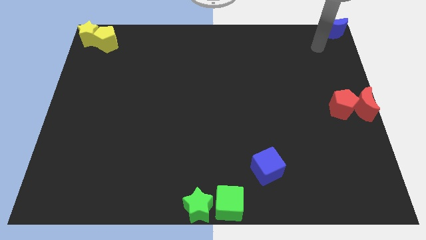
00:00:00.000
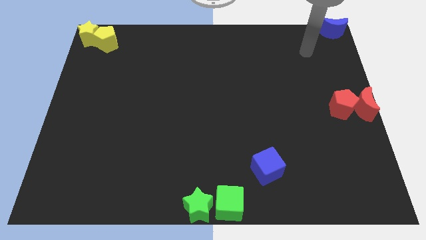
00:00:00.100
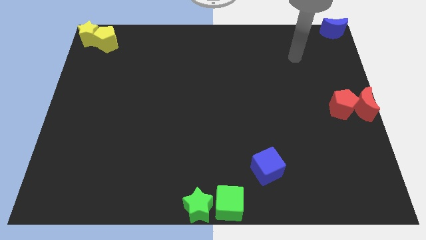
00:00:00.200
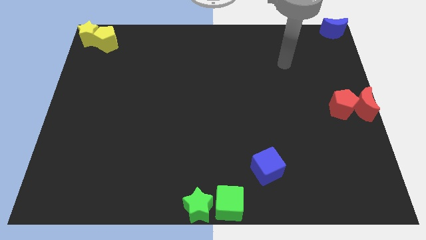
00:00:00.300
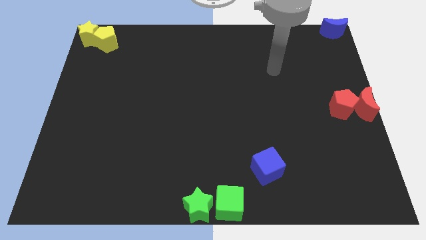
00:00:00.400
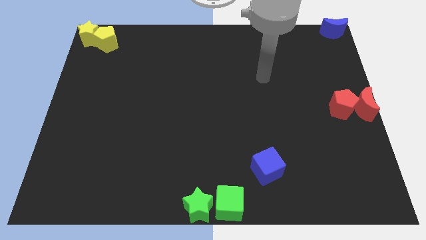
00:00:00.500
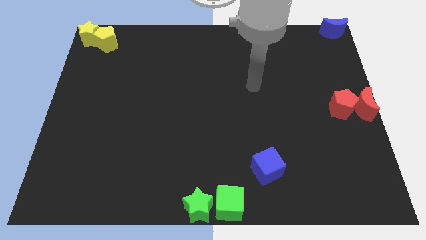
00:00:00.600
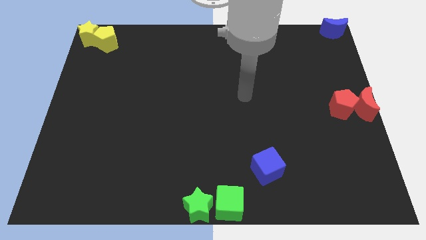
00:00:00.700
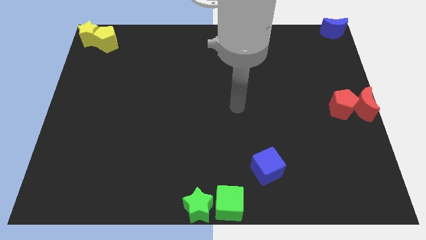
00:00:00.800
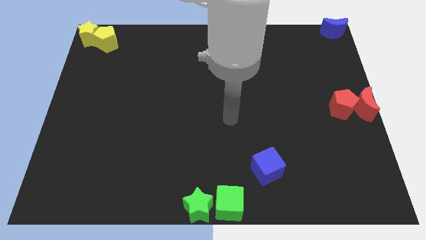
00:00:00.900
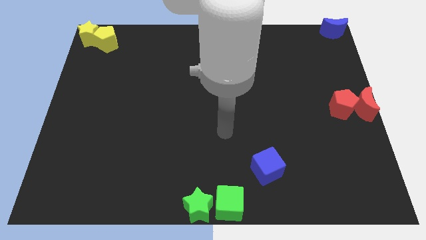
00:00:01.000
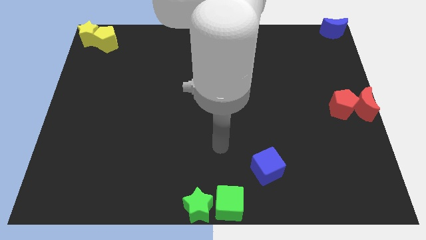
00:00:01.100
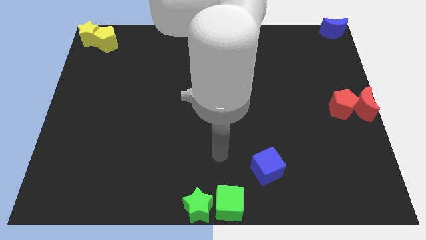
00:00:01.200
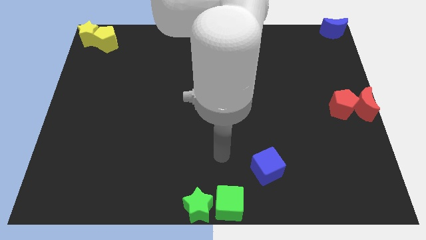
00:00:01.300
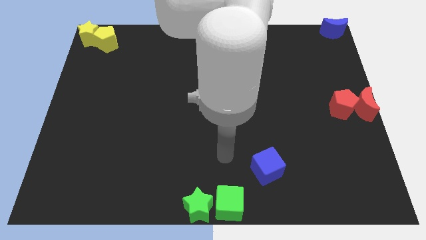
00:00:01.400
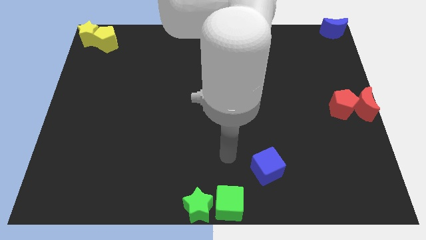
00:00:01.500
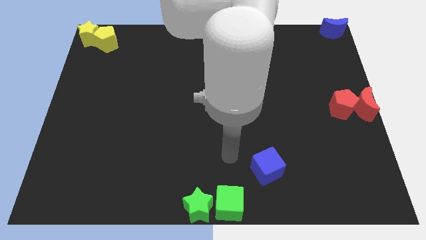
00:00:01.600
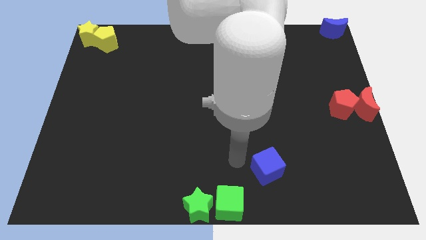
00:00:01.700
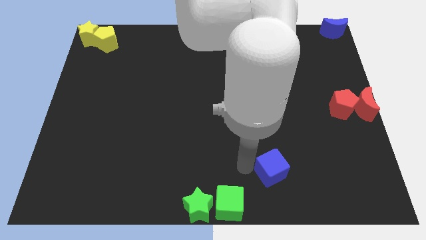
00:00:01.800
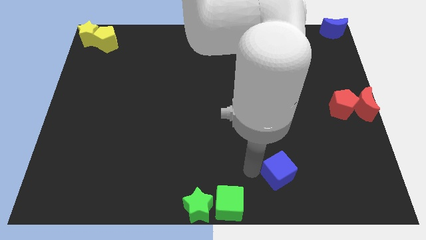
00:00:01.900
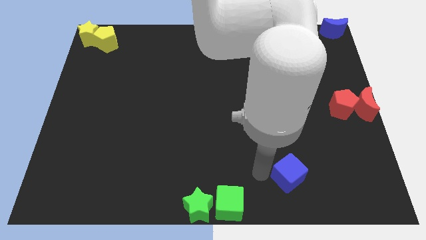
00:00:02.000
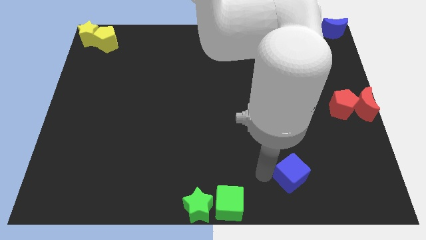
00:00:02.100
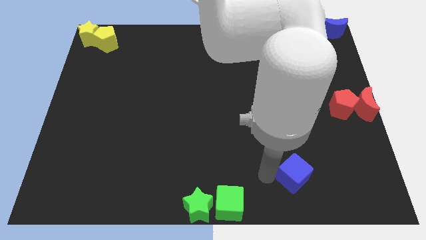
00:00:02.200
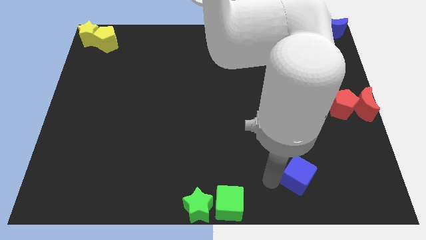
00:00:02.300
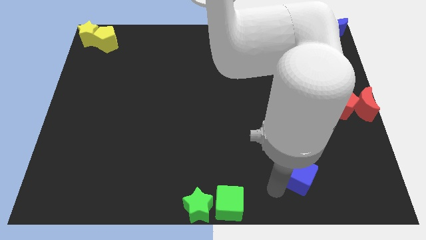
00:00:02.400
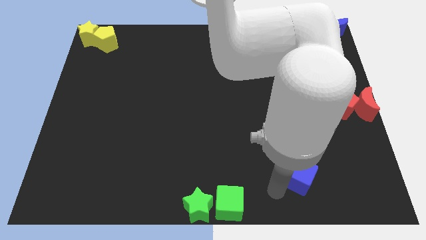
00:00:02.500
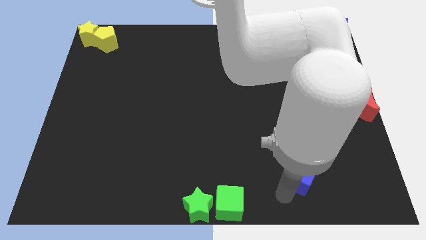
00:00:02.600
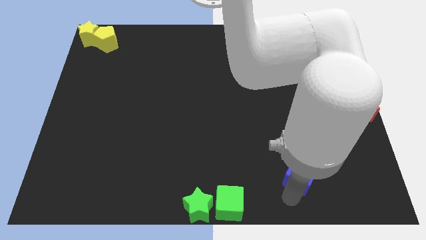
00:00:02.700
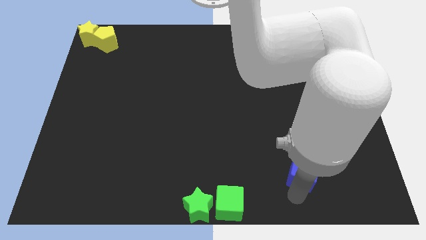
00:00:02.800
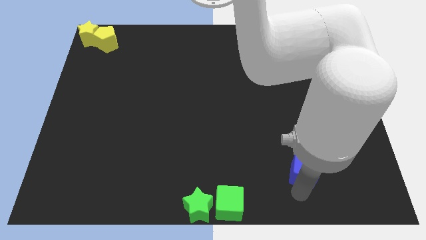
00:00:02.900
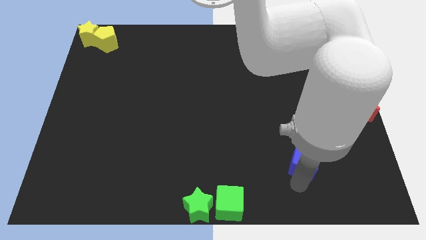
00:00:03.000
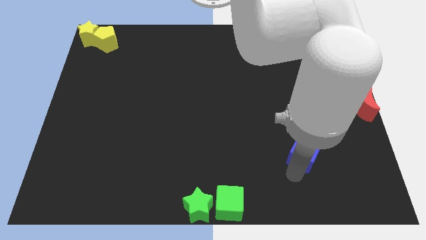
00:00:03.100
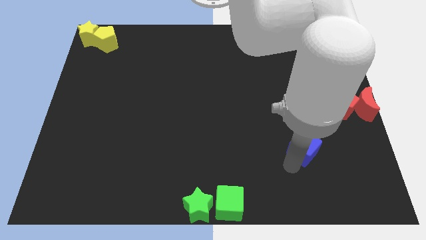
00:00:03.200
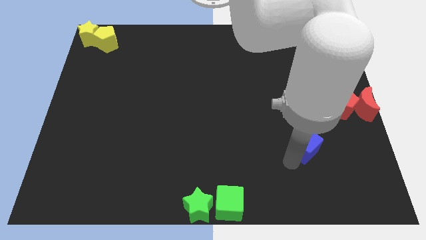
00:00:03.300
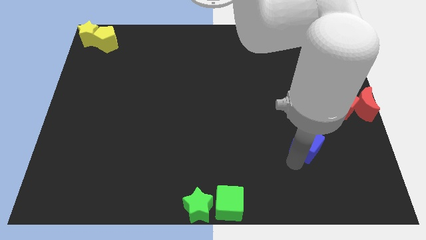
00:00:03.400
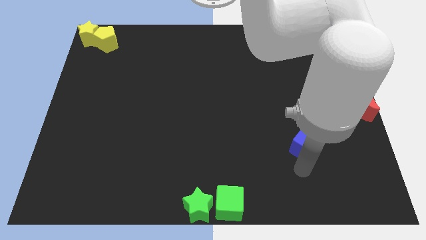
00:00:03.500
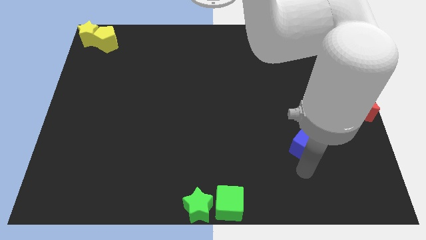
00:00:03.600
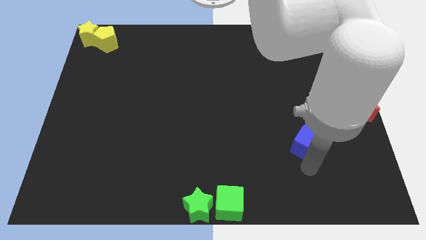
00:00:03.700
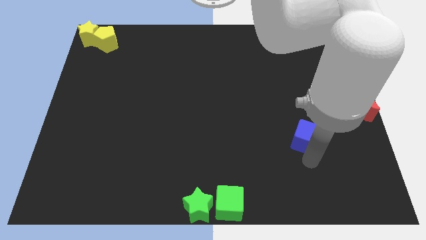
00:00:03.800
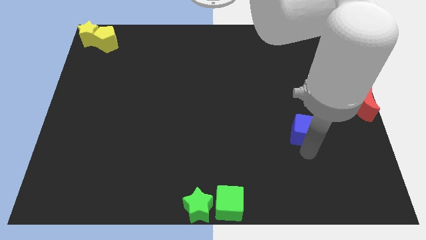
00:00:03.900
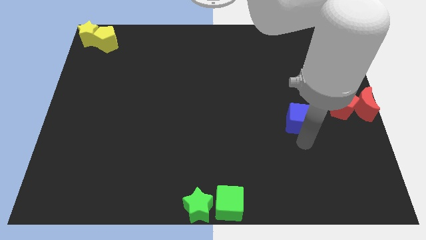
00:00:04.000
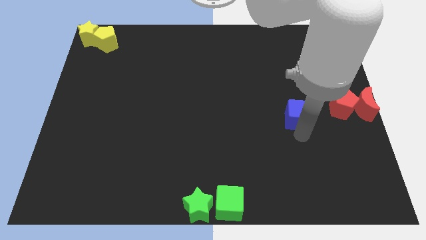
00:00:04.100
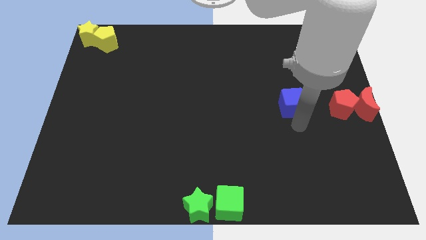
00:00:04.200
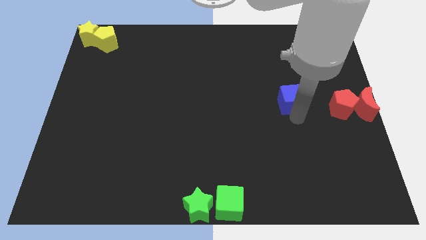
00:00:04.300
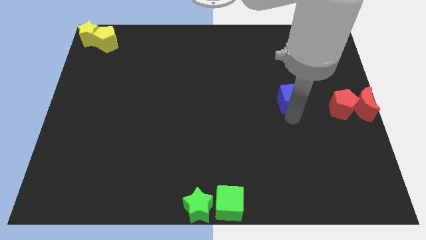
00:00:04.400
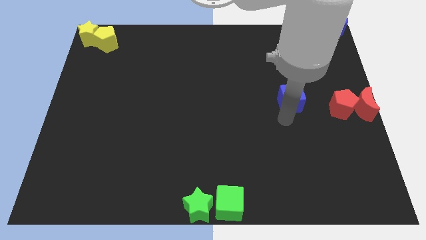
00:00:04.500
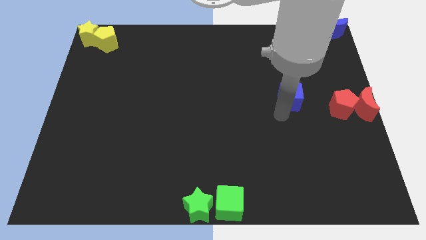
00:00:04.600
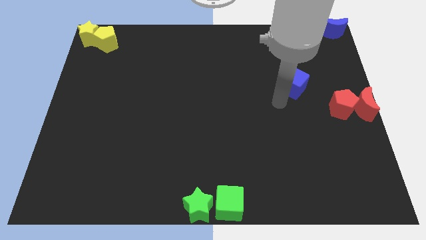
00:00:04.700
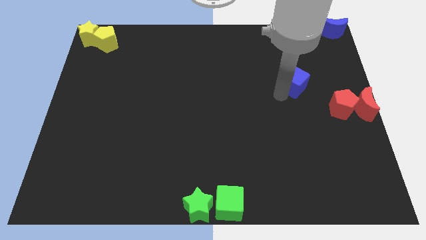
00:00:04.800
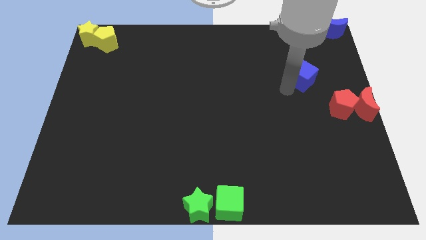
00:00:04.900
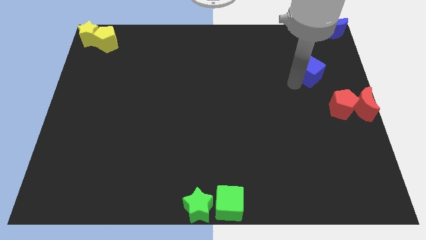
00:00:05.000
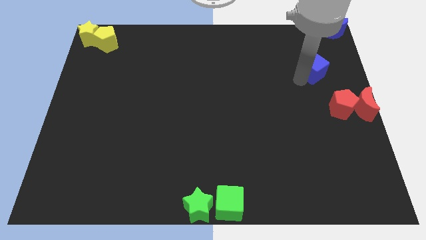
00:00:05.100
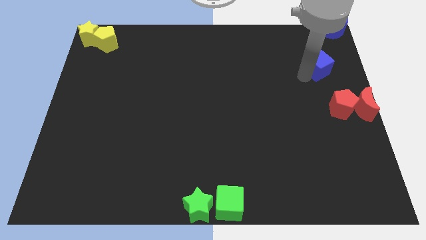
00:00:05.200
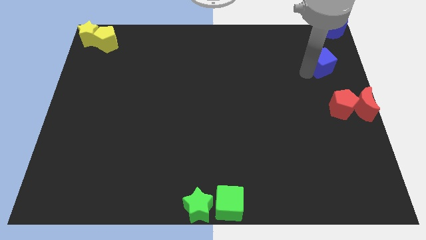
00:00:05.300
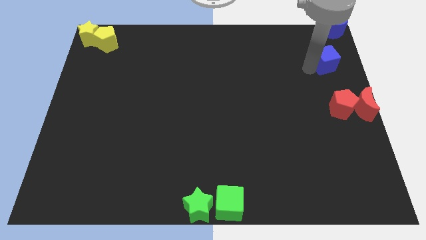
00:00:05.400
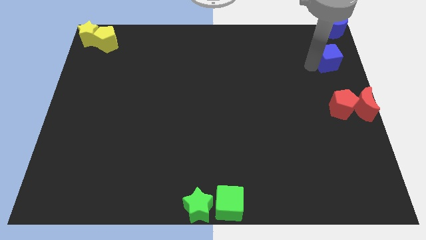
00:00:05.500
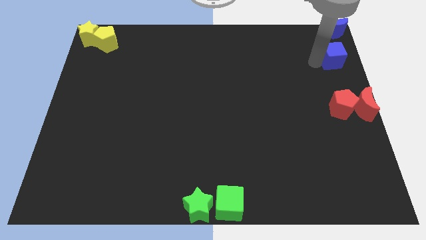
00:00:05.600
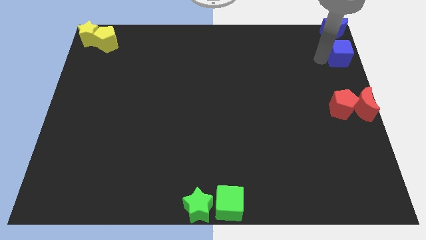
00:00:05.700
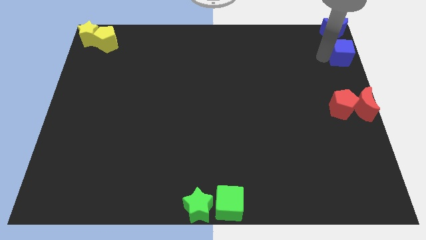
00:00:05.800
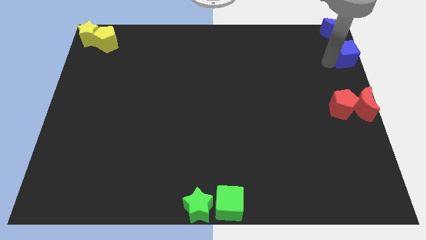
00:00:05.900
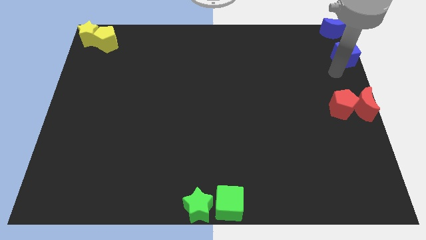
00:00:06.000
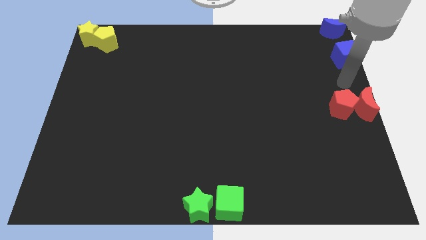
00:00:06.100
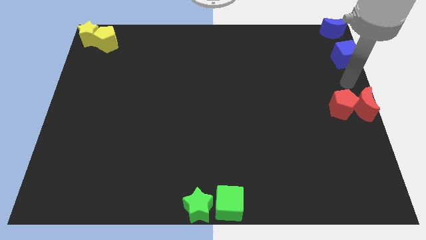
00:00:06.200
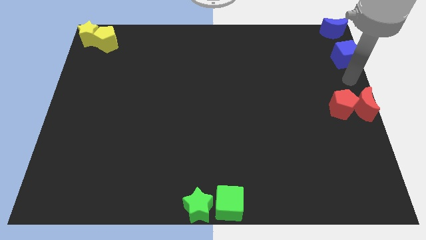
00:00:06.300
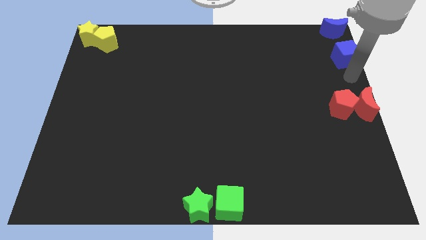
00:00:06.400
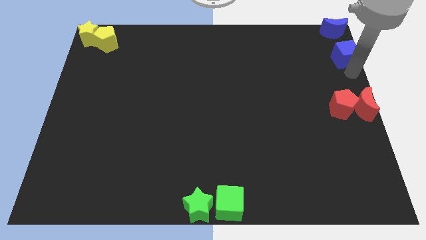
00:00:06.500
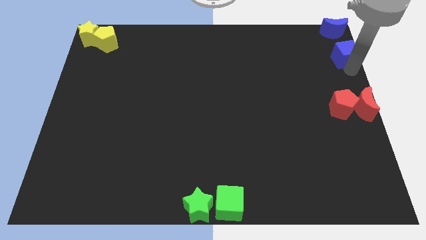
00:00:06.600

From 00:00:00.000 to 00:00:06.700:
place blue cube below the blue moon

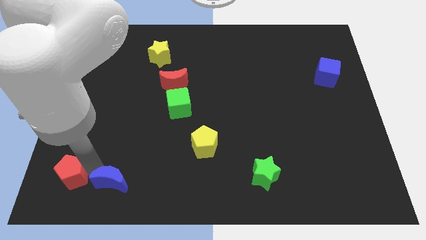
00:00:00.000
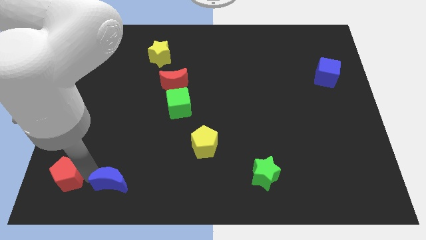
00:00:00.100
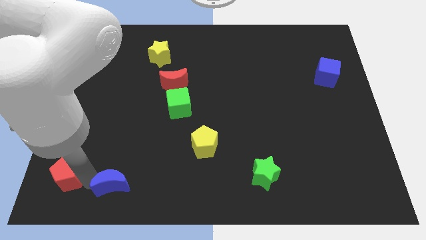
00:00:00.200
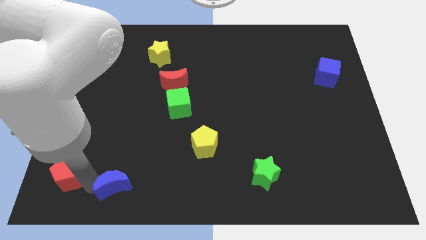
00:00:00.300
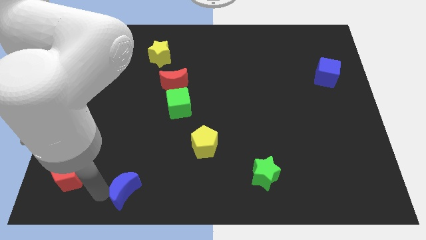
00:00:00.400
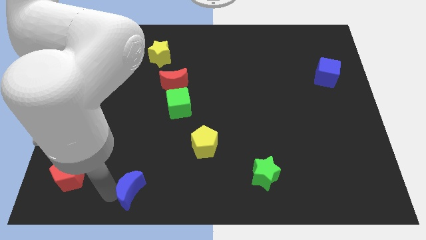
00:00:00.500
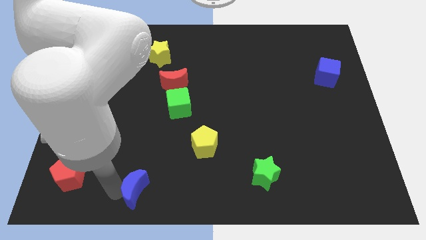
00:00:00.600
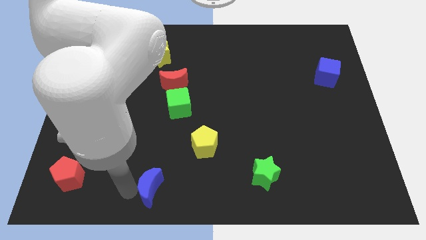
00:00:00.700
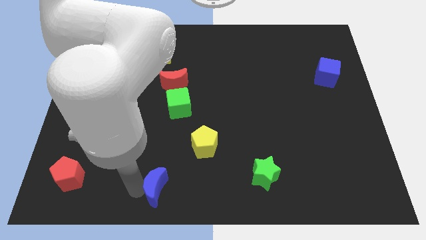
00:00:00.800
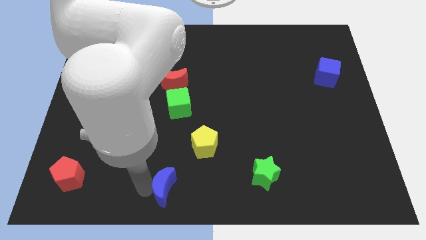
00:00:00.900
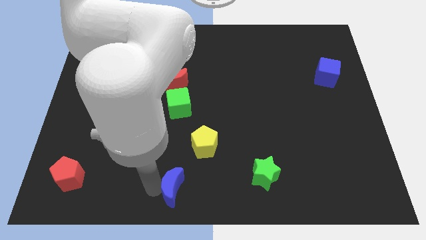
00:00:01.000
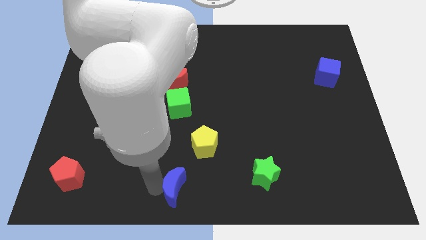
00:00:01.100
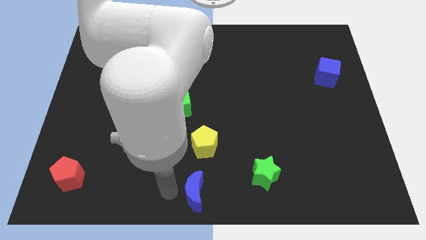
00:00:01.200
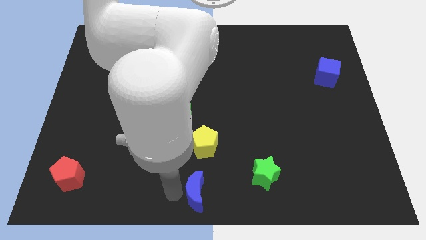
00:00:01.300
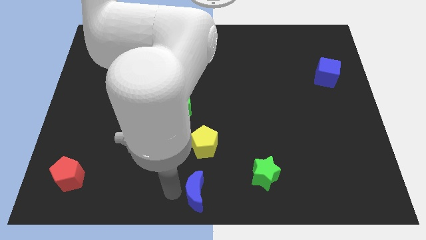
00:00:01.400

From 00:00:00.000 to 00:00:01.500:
put the blue crescent vertically below the yellow pentagon

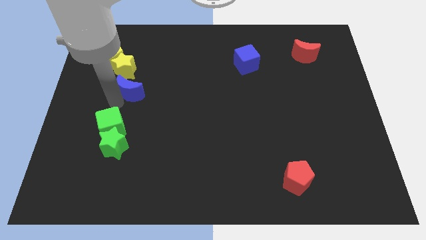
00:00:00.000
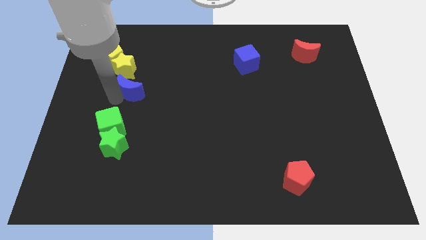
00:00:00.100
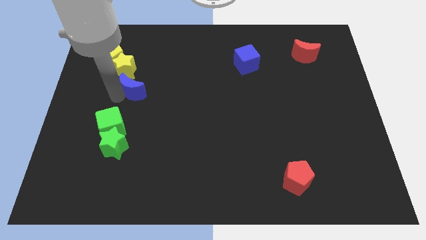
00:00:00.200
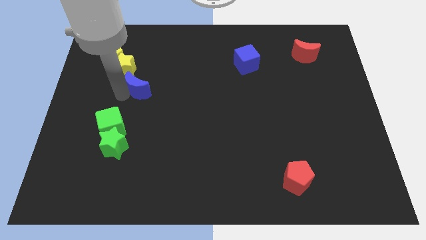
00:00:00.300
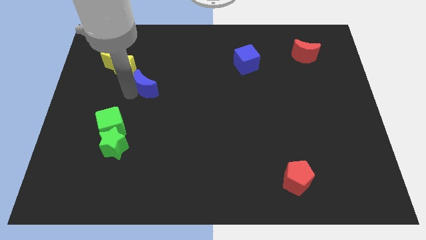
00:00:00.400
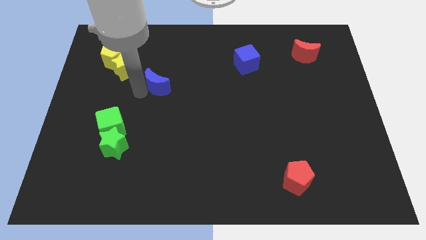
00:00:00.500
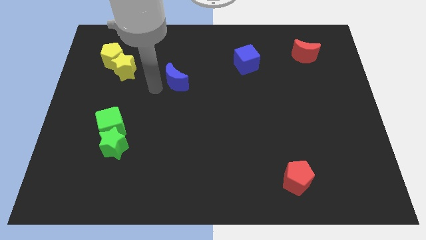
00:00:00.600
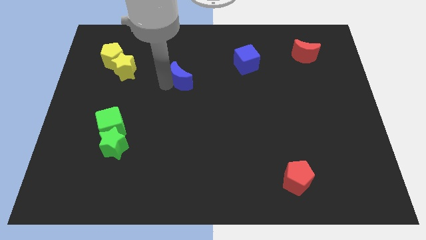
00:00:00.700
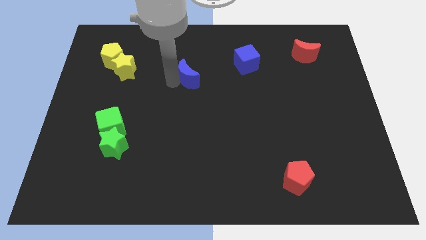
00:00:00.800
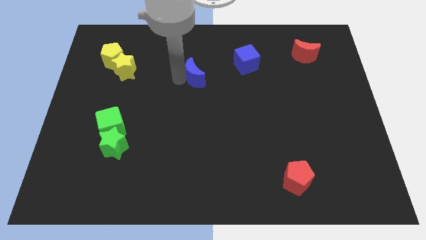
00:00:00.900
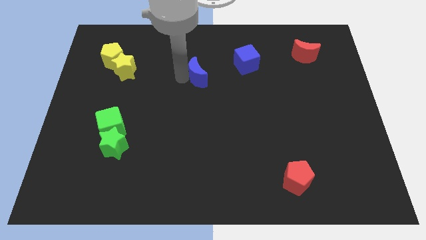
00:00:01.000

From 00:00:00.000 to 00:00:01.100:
place blue moon parallel right to the yellow star
